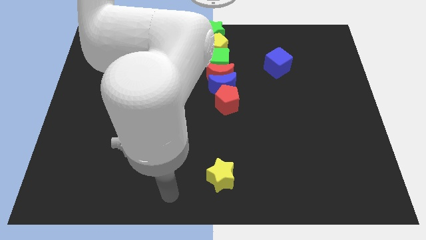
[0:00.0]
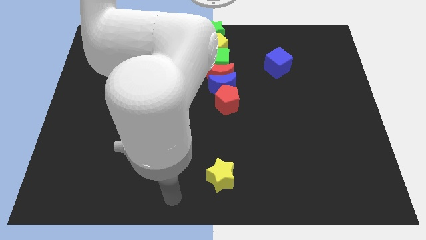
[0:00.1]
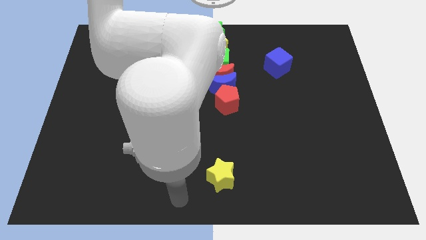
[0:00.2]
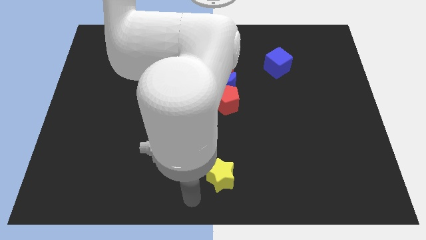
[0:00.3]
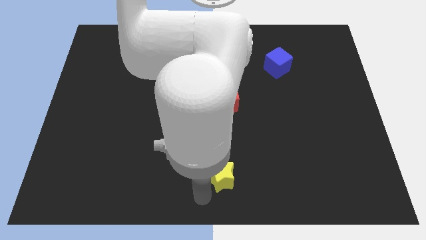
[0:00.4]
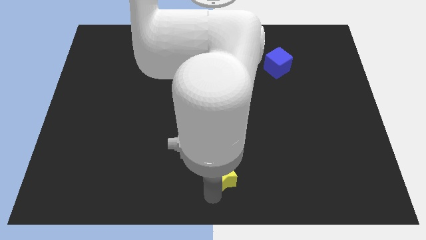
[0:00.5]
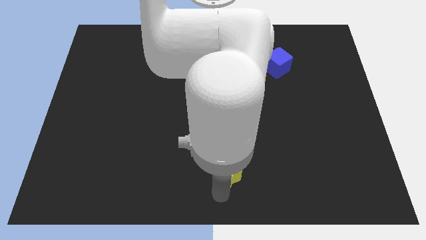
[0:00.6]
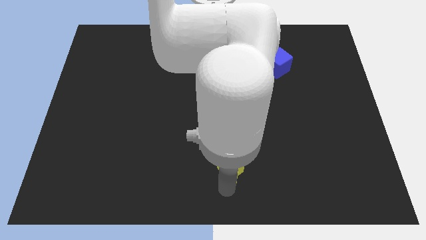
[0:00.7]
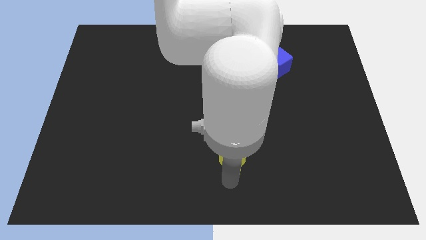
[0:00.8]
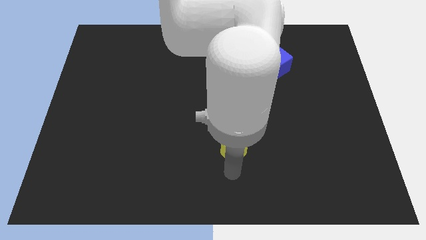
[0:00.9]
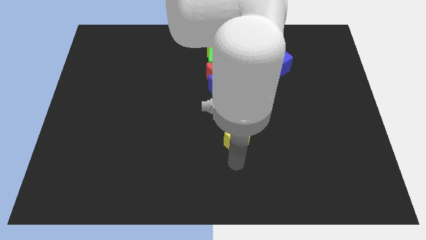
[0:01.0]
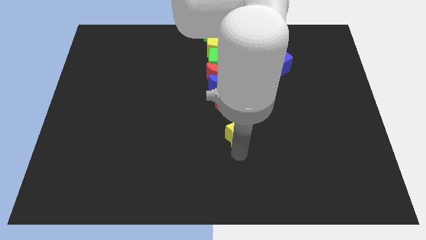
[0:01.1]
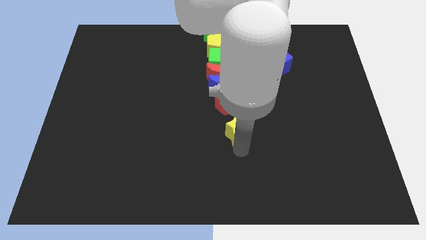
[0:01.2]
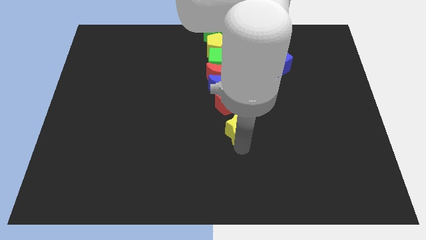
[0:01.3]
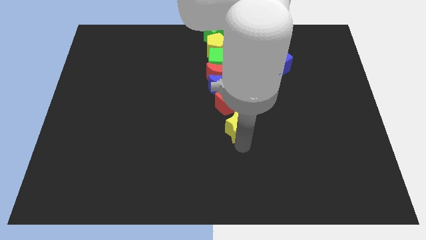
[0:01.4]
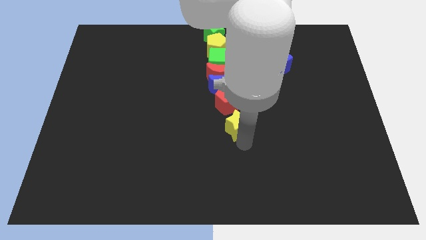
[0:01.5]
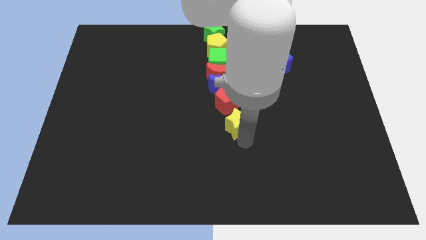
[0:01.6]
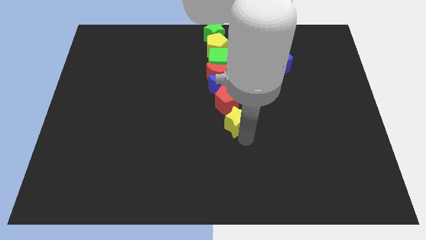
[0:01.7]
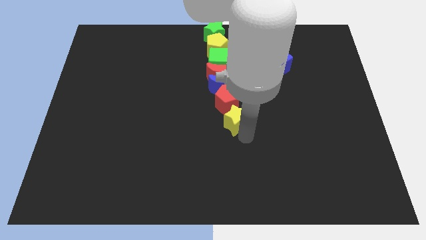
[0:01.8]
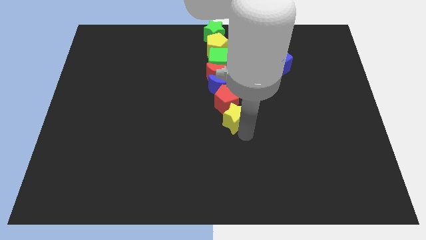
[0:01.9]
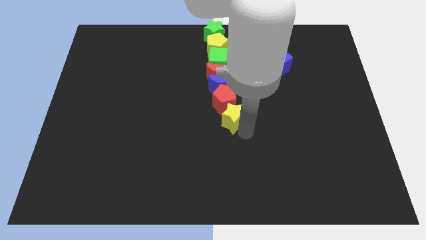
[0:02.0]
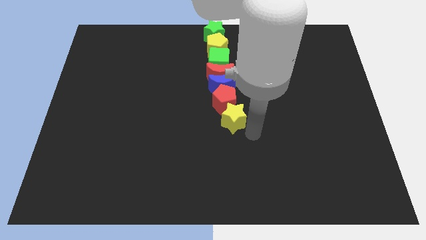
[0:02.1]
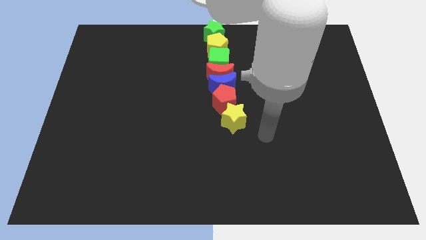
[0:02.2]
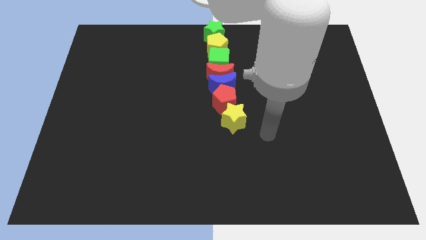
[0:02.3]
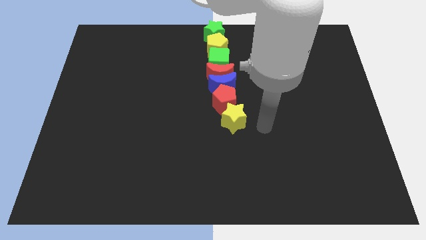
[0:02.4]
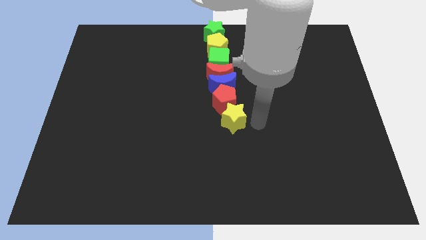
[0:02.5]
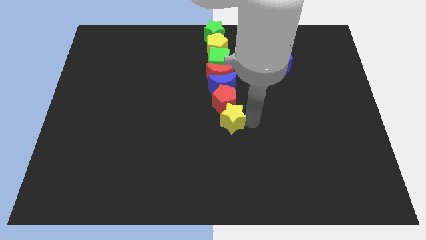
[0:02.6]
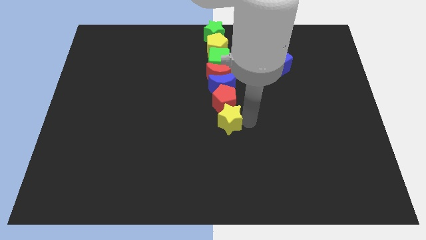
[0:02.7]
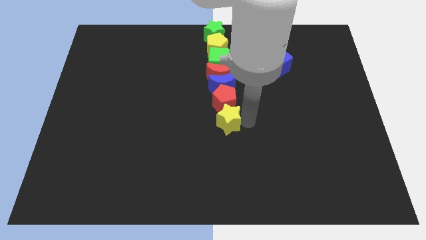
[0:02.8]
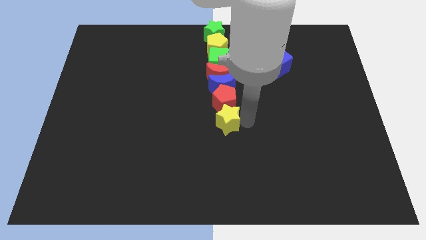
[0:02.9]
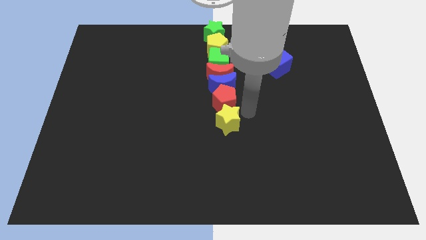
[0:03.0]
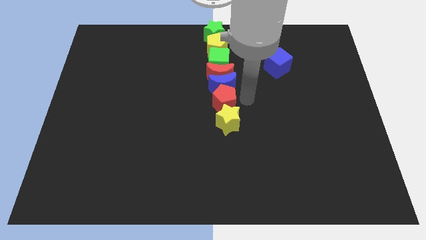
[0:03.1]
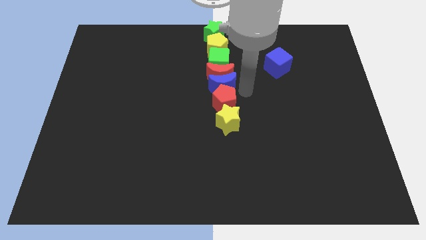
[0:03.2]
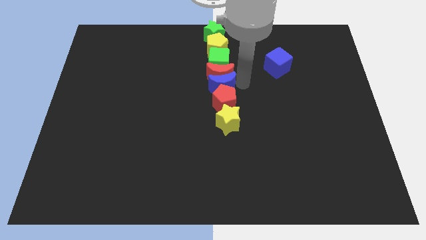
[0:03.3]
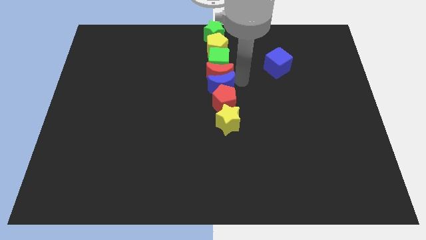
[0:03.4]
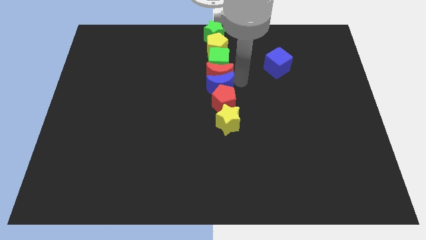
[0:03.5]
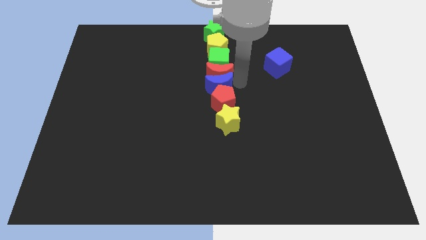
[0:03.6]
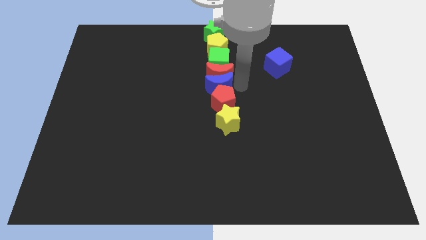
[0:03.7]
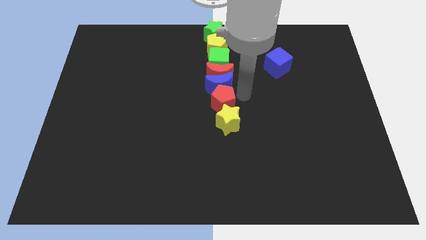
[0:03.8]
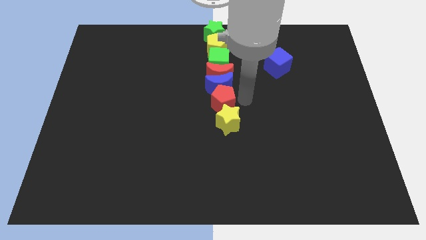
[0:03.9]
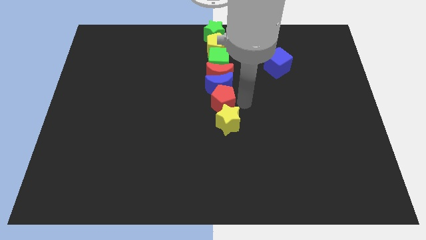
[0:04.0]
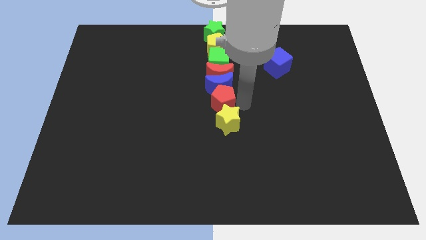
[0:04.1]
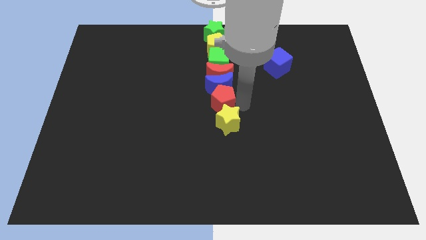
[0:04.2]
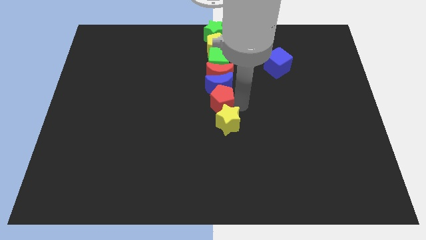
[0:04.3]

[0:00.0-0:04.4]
move the yellow star down to the red pentagon

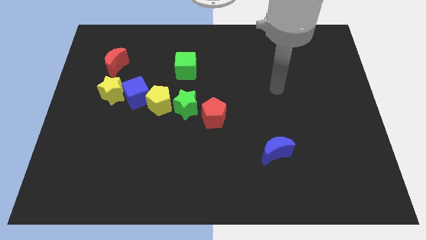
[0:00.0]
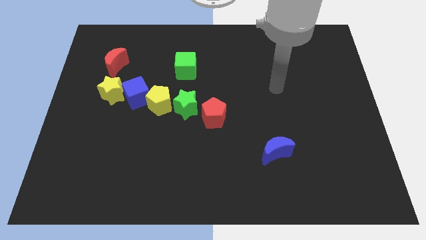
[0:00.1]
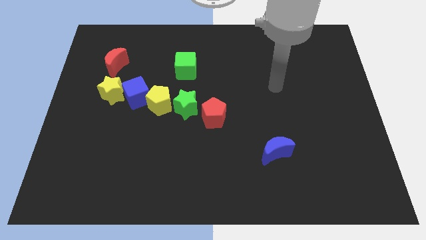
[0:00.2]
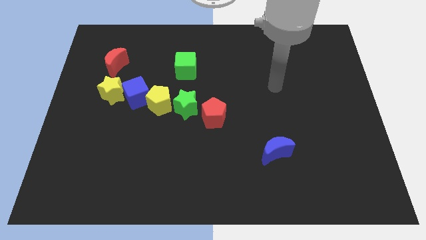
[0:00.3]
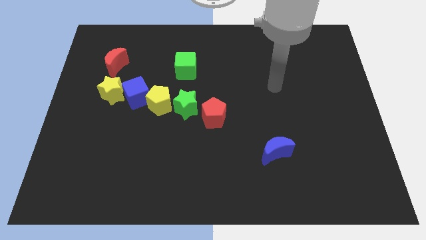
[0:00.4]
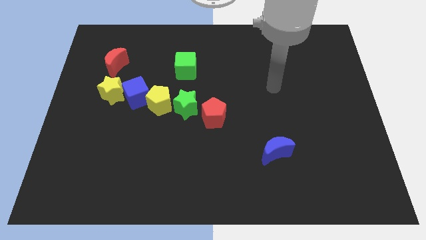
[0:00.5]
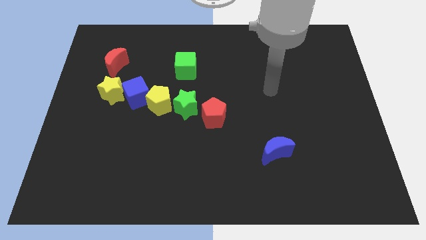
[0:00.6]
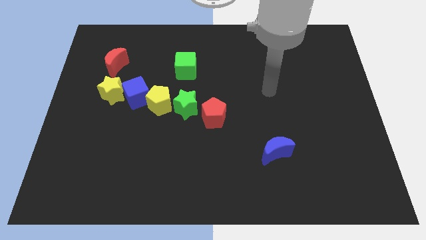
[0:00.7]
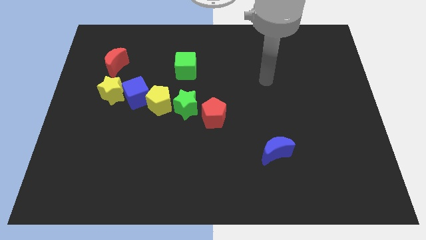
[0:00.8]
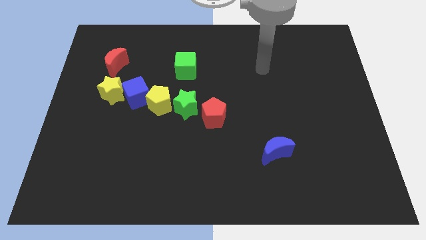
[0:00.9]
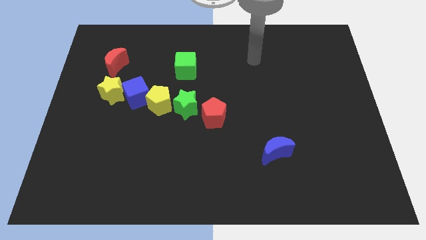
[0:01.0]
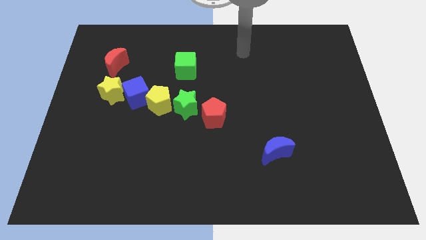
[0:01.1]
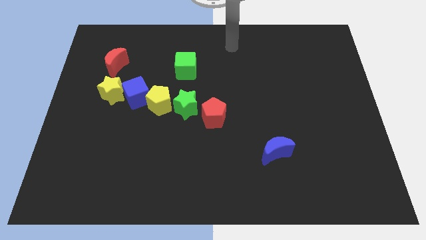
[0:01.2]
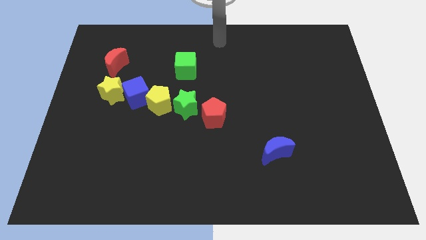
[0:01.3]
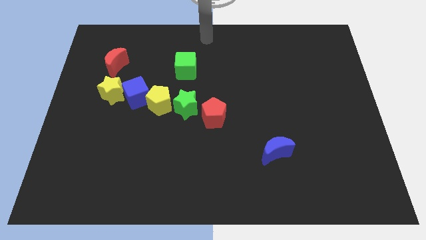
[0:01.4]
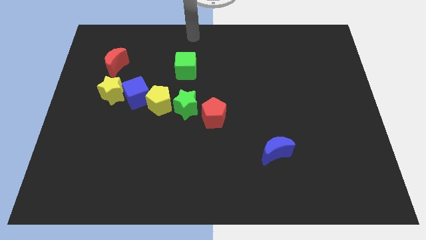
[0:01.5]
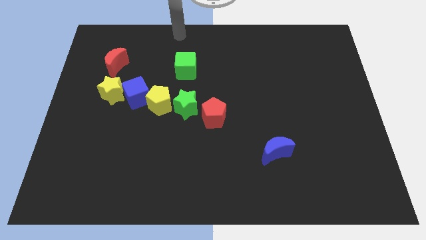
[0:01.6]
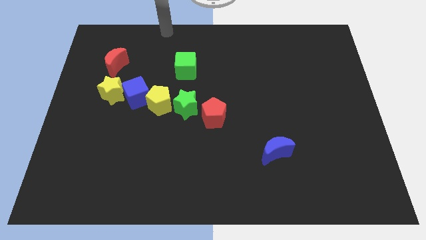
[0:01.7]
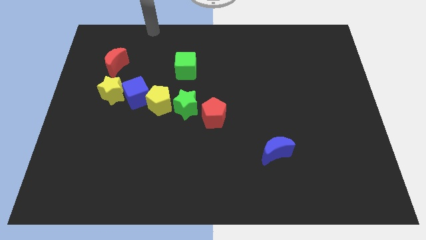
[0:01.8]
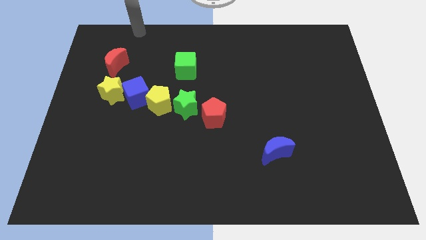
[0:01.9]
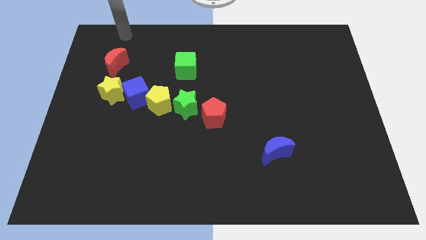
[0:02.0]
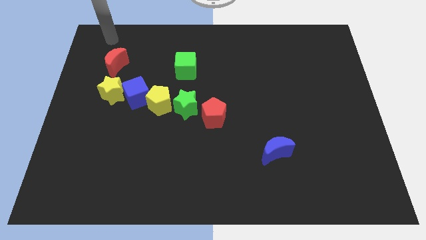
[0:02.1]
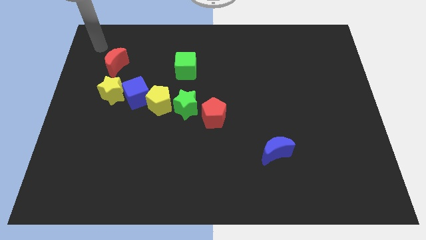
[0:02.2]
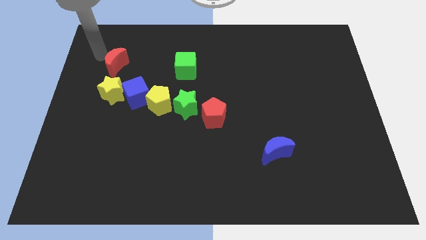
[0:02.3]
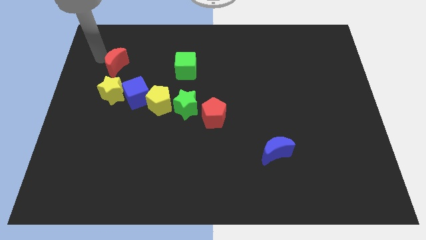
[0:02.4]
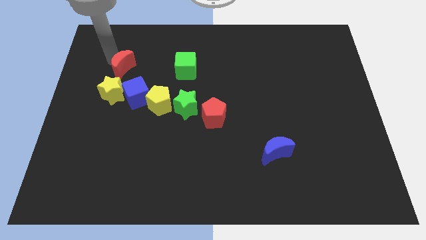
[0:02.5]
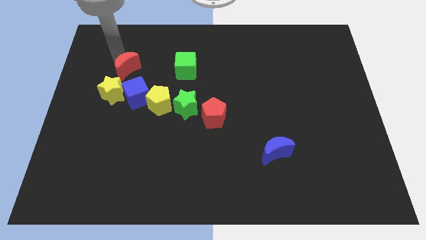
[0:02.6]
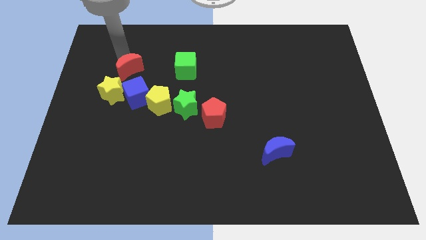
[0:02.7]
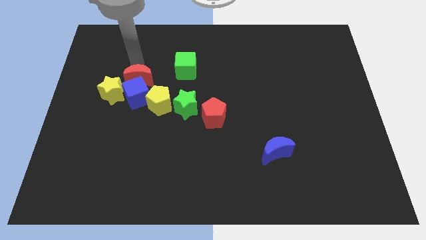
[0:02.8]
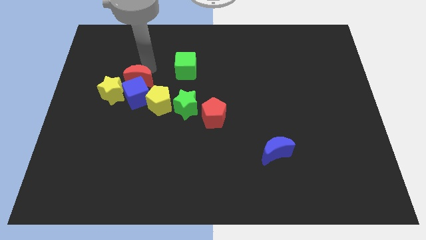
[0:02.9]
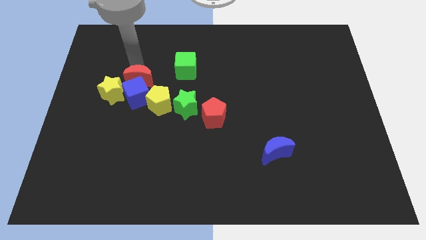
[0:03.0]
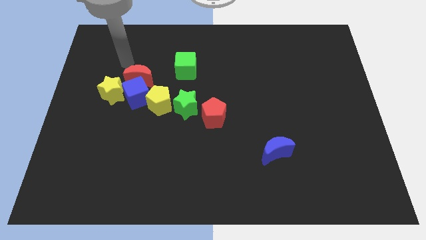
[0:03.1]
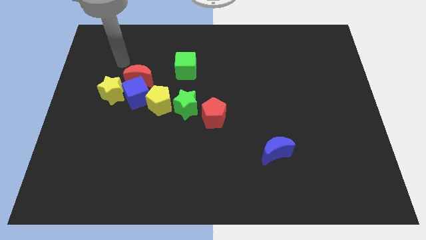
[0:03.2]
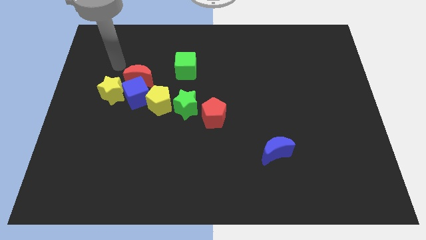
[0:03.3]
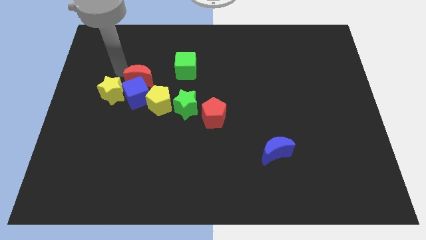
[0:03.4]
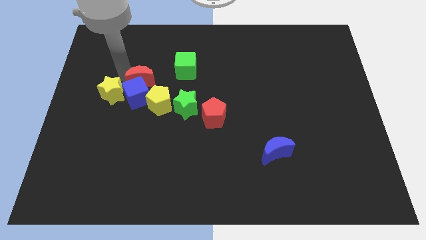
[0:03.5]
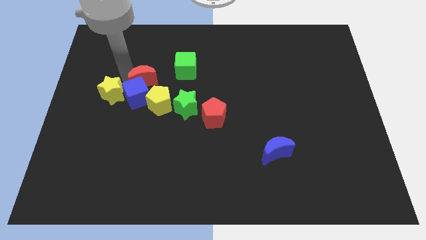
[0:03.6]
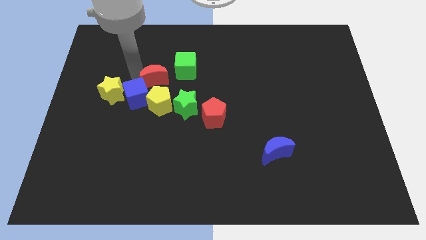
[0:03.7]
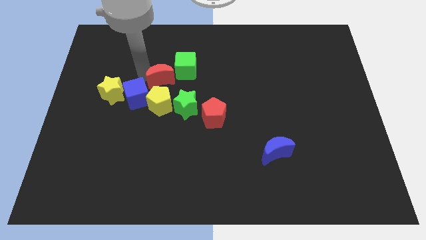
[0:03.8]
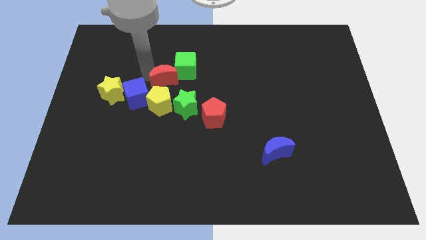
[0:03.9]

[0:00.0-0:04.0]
push the red crescent above the yellow pentagon

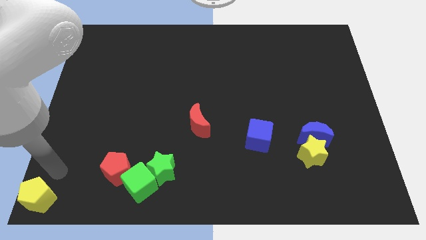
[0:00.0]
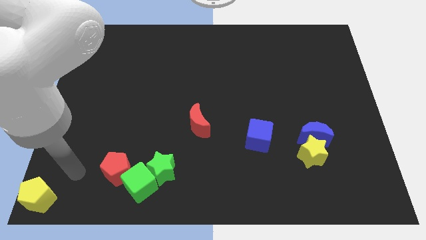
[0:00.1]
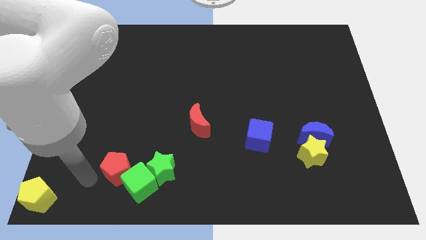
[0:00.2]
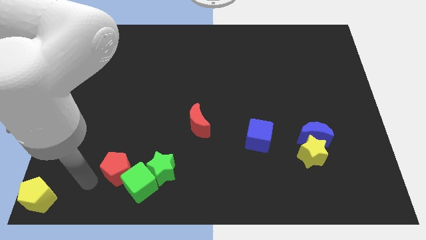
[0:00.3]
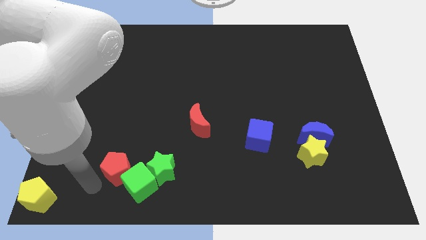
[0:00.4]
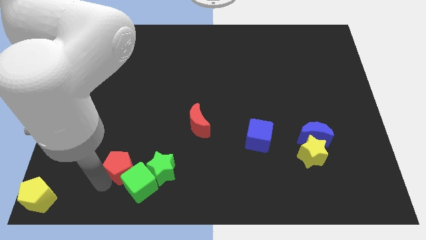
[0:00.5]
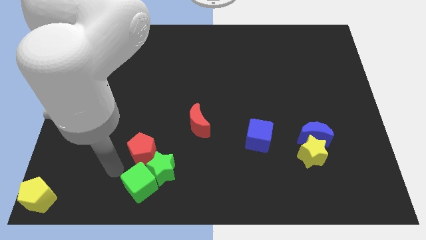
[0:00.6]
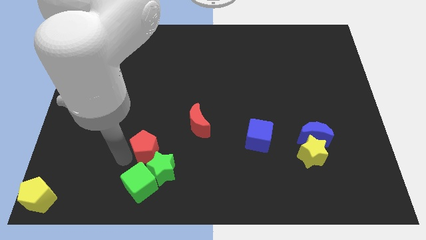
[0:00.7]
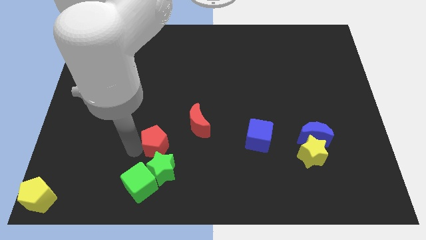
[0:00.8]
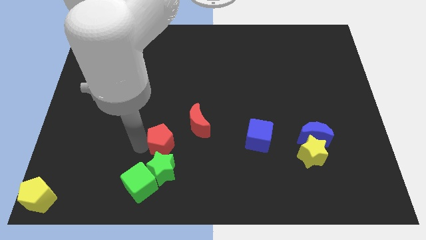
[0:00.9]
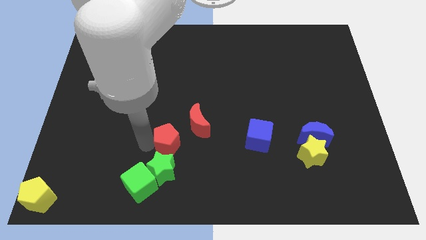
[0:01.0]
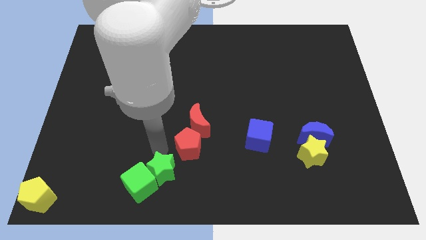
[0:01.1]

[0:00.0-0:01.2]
place red pentagon above the green star
